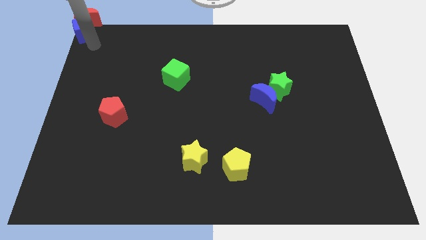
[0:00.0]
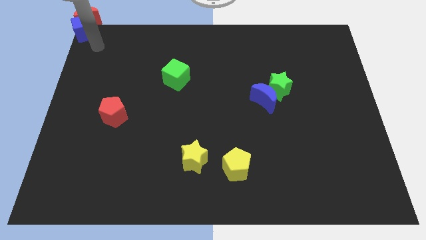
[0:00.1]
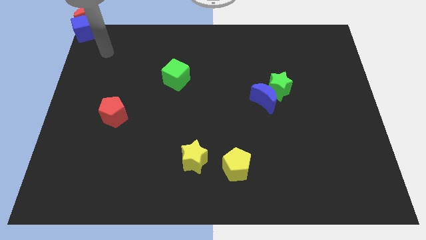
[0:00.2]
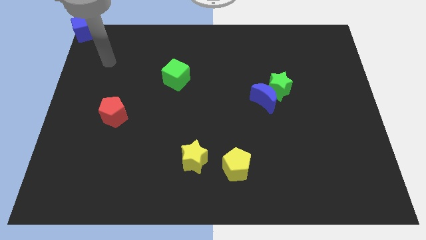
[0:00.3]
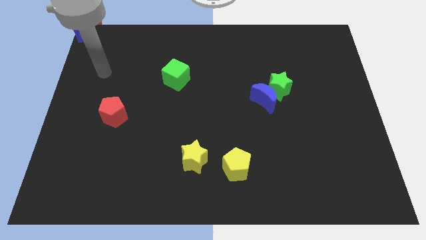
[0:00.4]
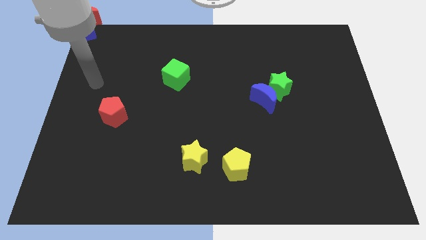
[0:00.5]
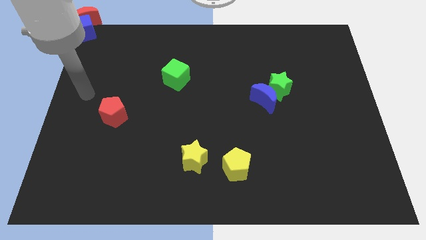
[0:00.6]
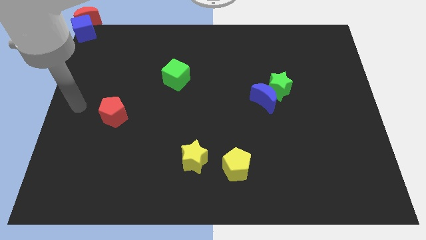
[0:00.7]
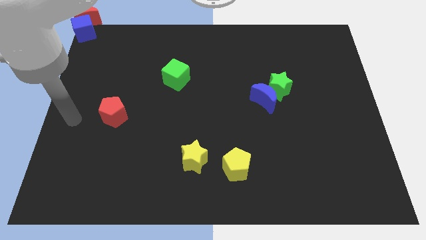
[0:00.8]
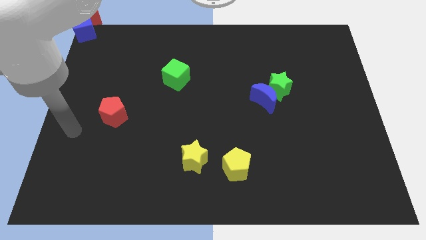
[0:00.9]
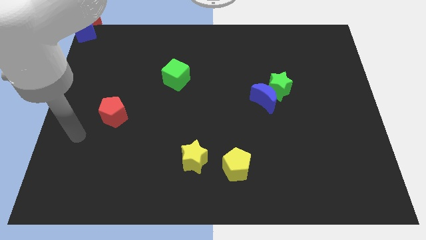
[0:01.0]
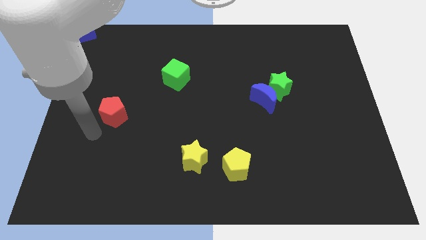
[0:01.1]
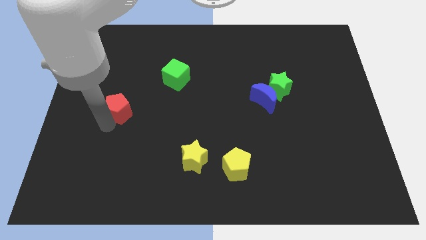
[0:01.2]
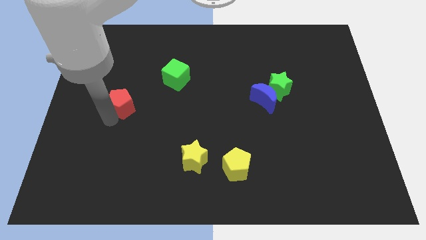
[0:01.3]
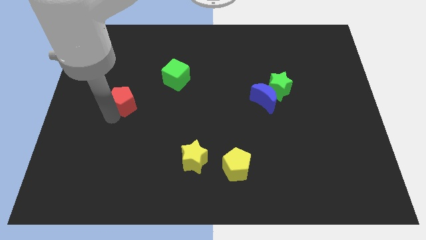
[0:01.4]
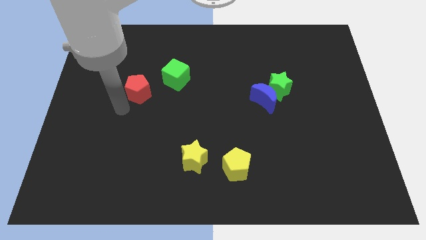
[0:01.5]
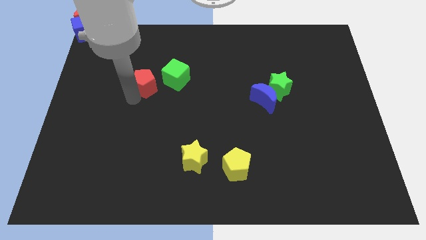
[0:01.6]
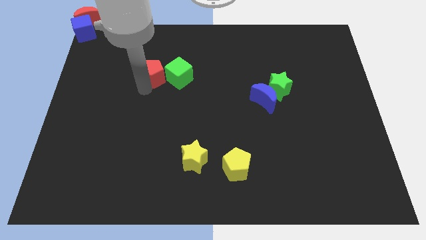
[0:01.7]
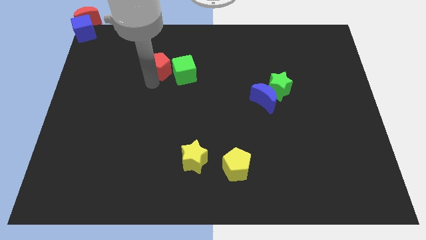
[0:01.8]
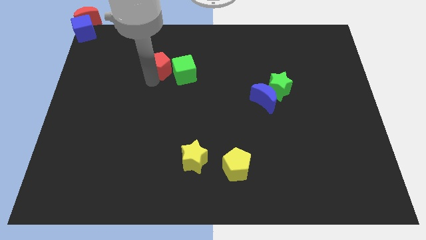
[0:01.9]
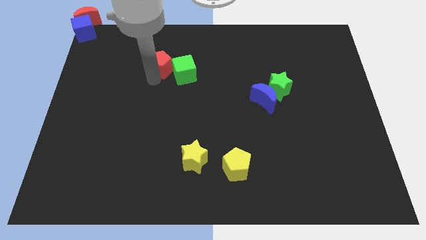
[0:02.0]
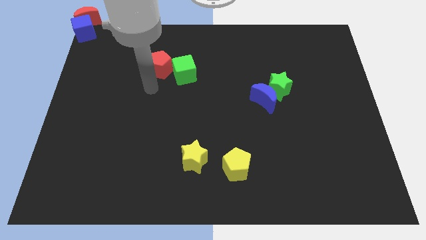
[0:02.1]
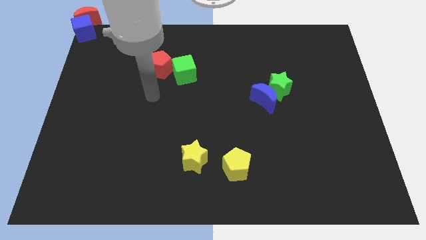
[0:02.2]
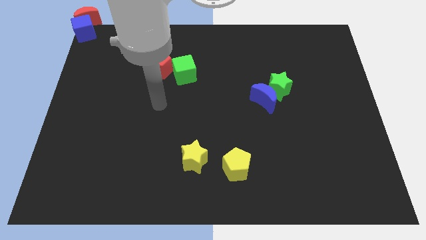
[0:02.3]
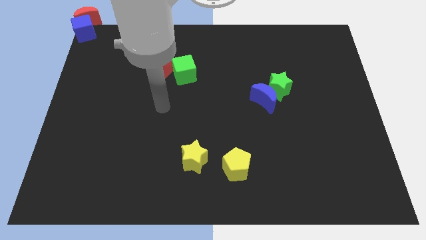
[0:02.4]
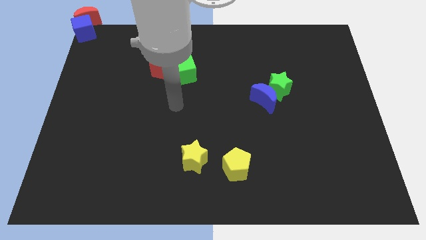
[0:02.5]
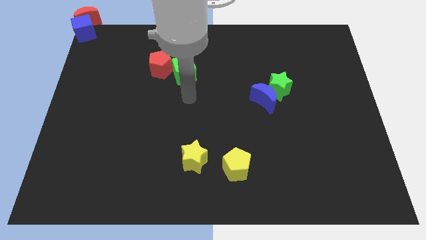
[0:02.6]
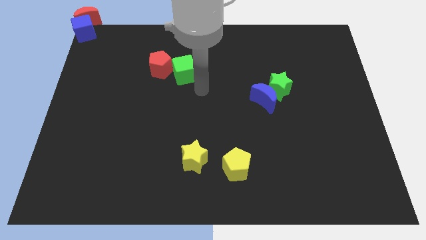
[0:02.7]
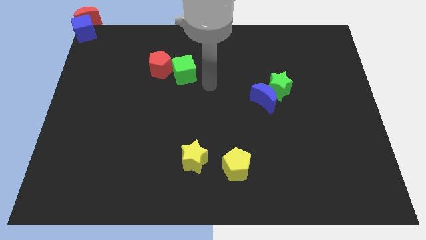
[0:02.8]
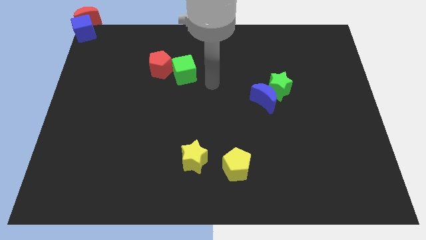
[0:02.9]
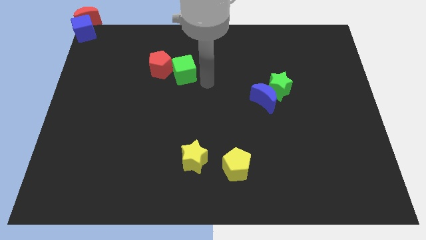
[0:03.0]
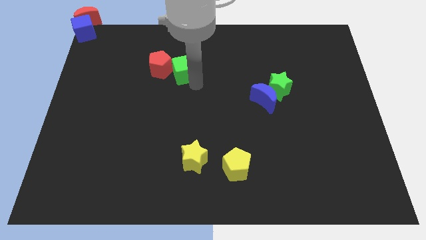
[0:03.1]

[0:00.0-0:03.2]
place the red pentagon at the left side of the green cube

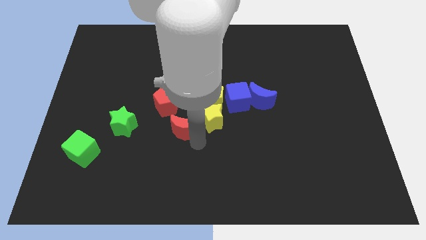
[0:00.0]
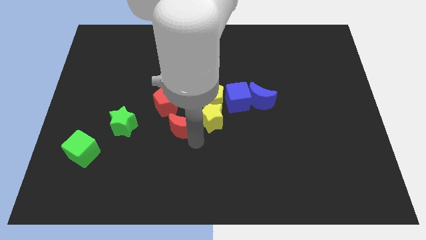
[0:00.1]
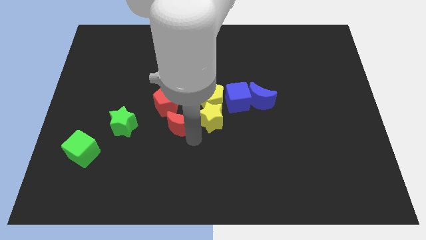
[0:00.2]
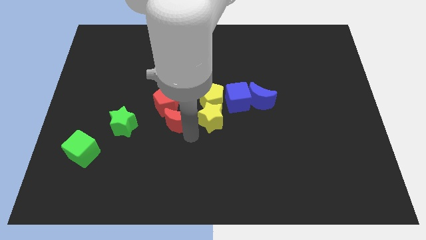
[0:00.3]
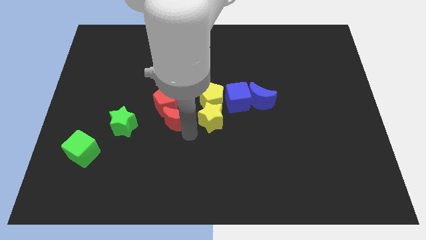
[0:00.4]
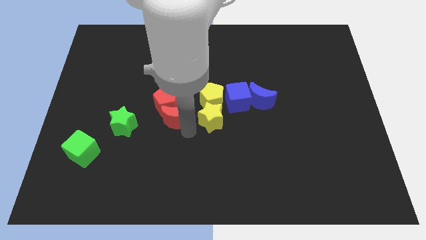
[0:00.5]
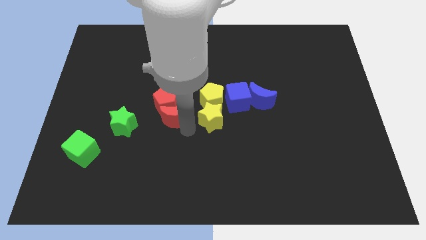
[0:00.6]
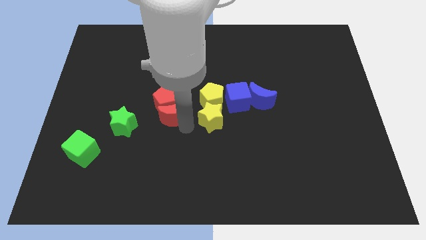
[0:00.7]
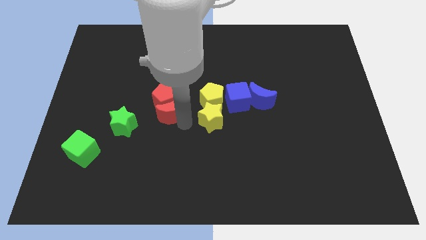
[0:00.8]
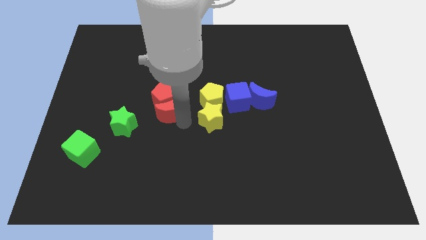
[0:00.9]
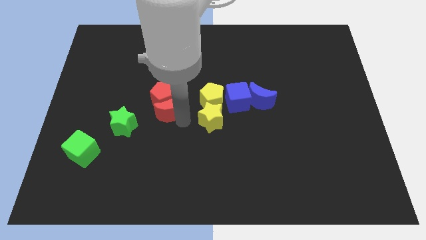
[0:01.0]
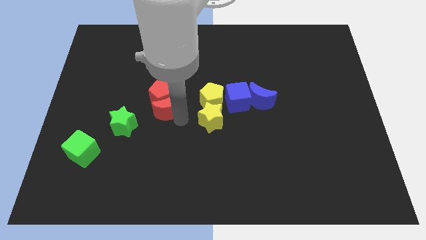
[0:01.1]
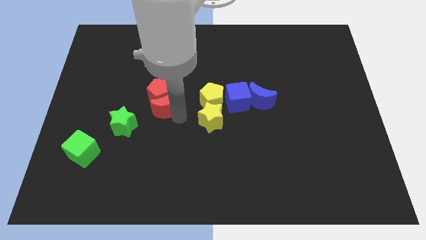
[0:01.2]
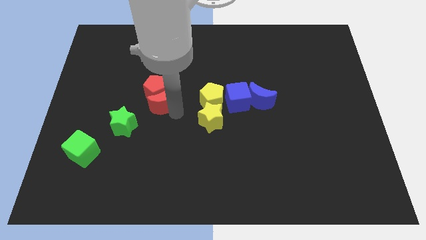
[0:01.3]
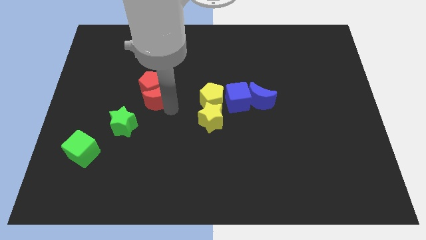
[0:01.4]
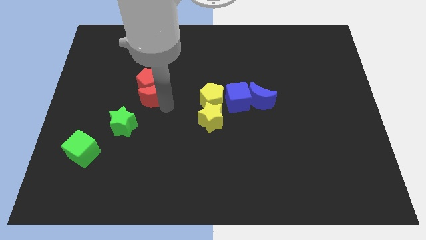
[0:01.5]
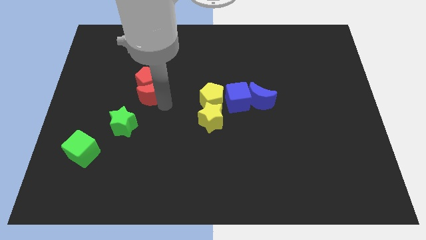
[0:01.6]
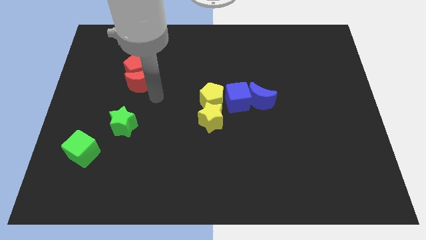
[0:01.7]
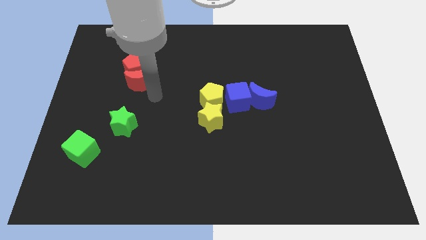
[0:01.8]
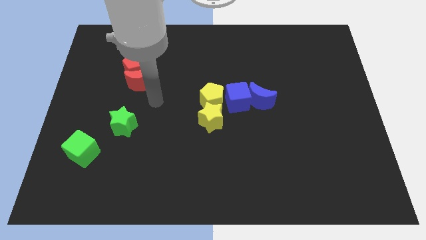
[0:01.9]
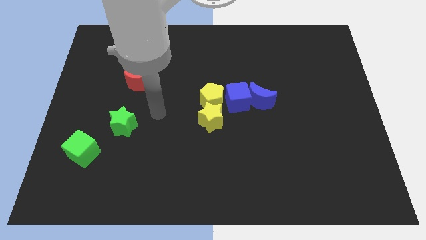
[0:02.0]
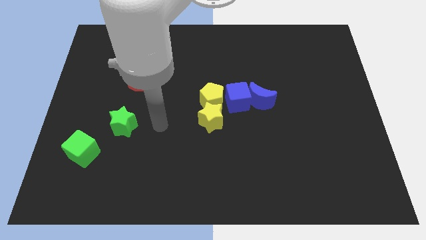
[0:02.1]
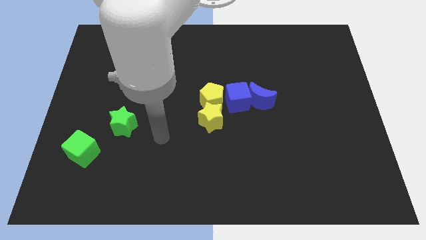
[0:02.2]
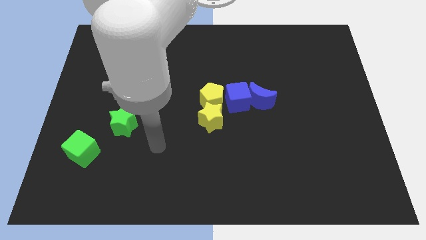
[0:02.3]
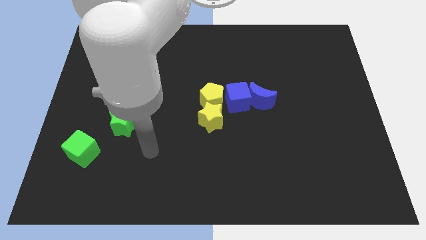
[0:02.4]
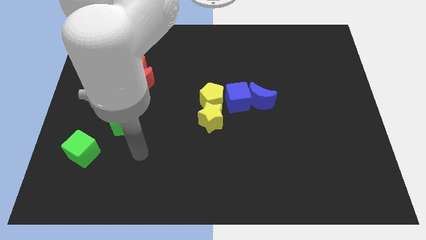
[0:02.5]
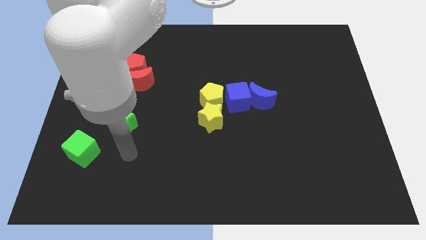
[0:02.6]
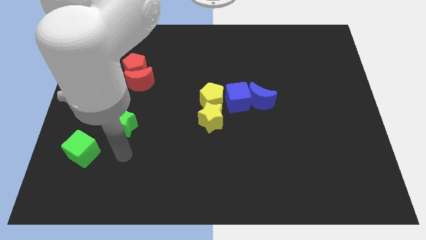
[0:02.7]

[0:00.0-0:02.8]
push the red moon and the red pentagon towards top

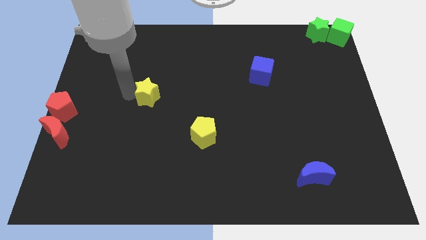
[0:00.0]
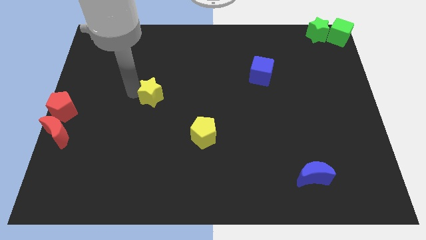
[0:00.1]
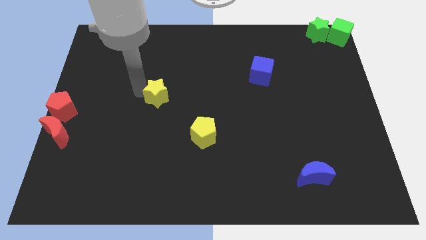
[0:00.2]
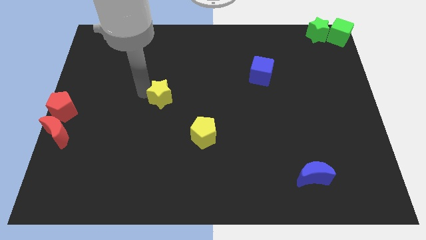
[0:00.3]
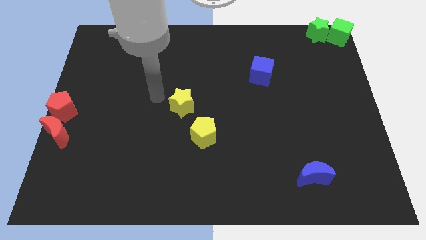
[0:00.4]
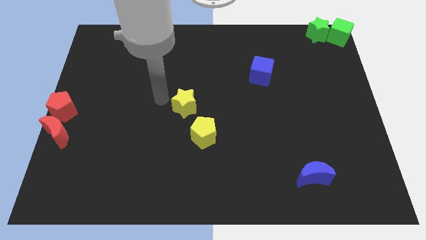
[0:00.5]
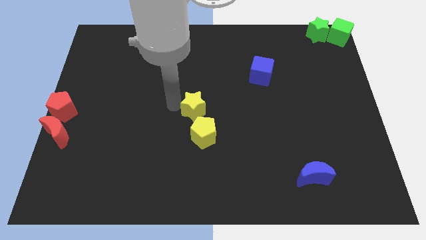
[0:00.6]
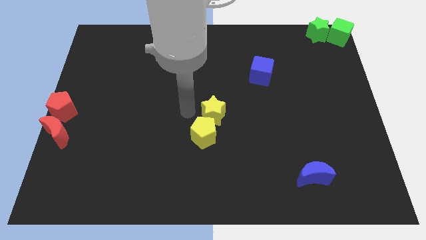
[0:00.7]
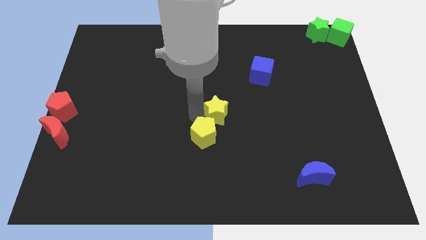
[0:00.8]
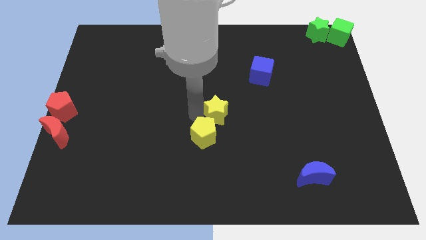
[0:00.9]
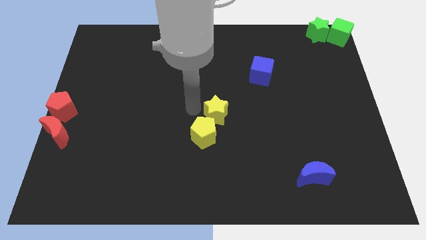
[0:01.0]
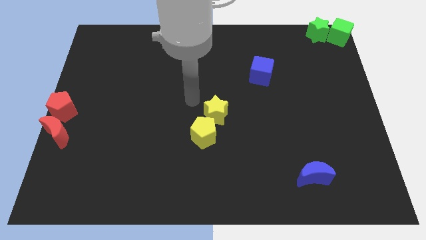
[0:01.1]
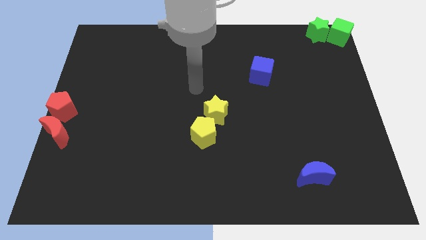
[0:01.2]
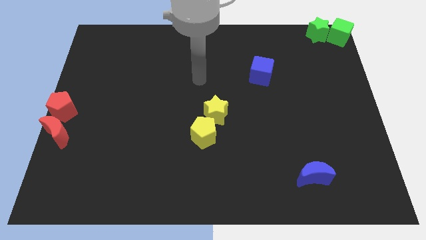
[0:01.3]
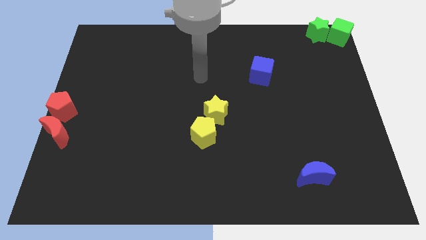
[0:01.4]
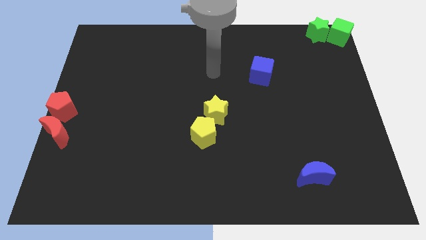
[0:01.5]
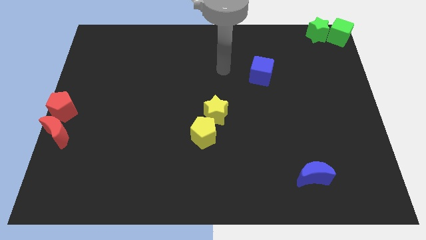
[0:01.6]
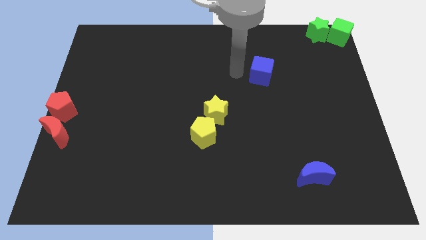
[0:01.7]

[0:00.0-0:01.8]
move the yellow star to the center of the board

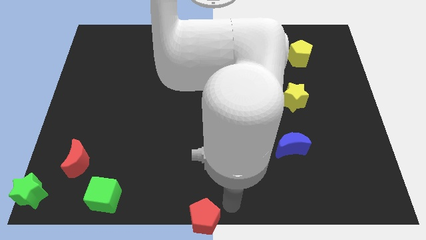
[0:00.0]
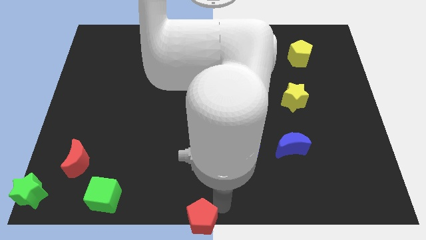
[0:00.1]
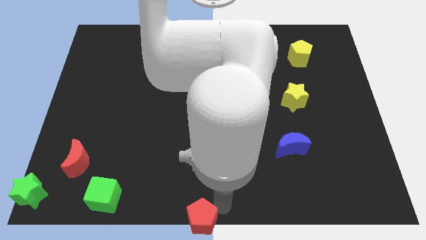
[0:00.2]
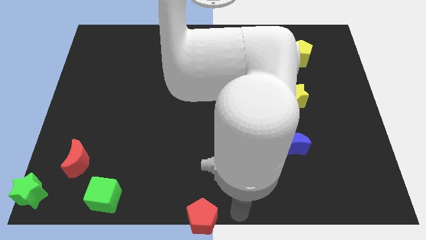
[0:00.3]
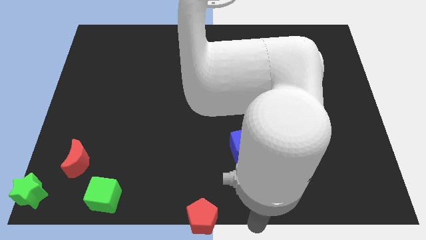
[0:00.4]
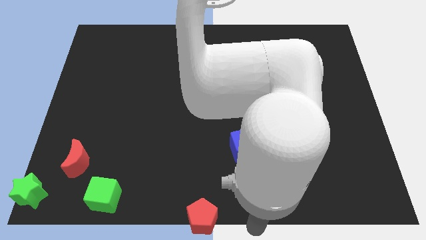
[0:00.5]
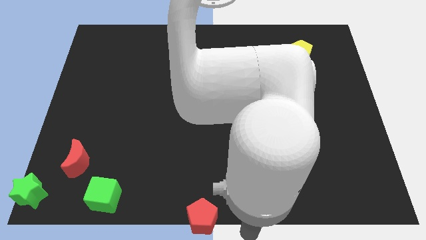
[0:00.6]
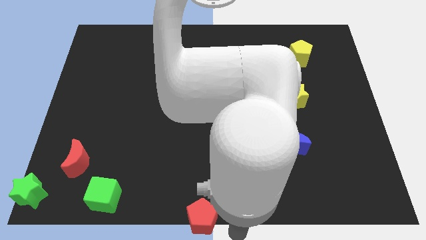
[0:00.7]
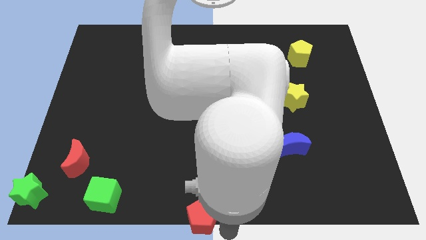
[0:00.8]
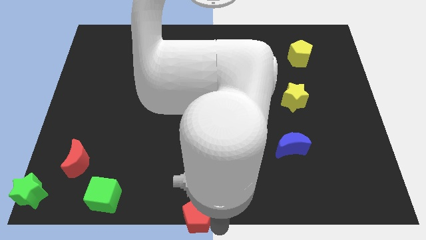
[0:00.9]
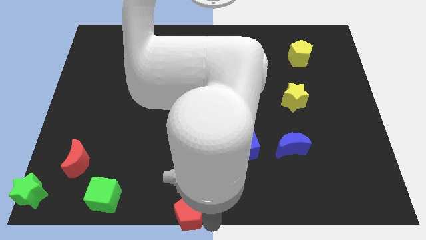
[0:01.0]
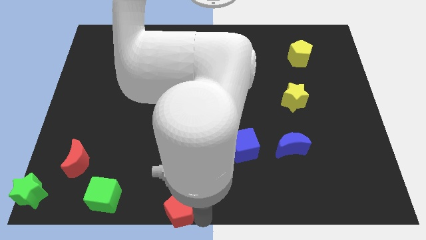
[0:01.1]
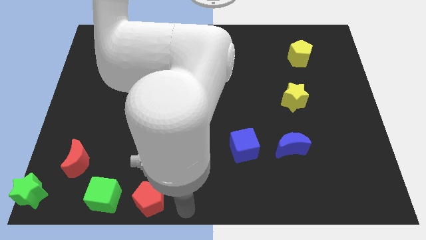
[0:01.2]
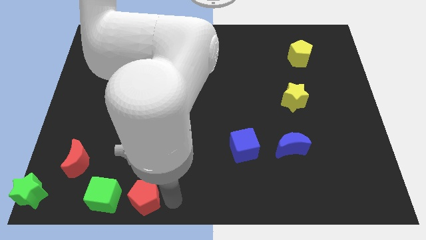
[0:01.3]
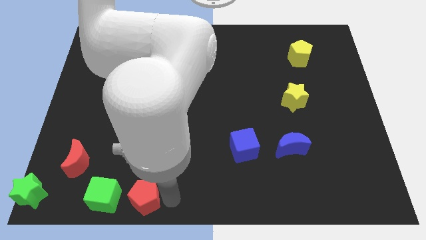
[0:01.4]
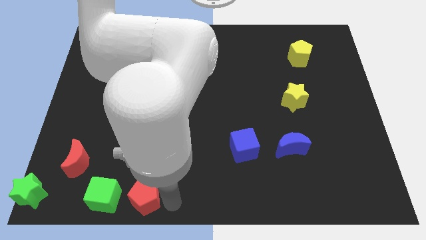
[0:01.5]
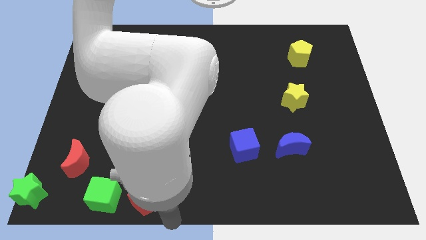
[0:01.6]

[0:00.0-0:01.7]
push the red pentagon to the right of green cube
